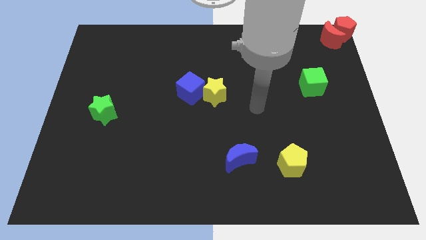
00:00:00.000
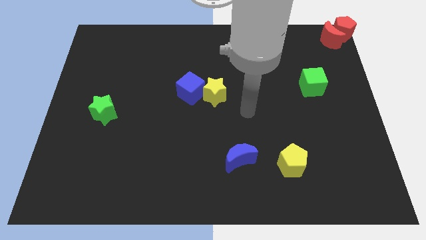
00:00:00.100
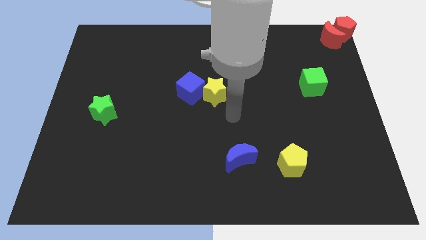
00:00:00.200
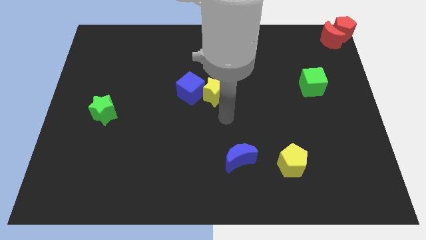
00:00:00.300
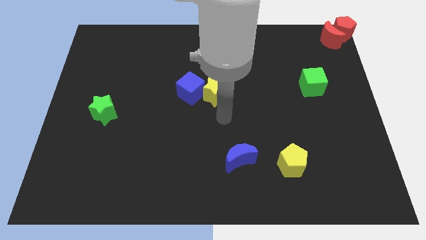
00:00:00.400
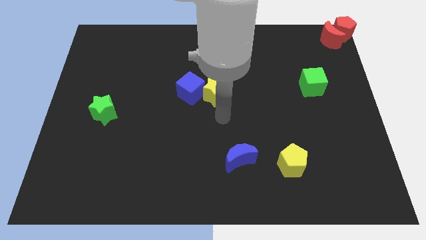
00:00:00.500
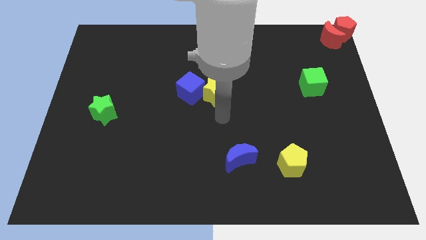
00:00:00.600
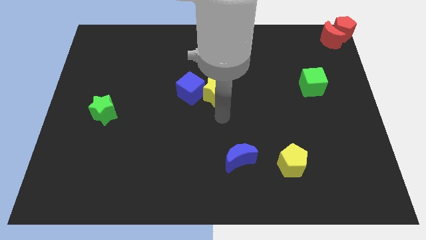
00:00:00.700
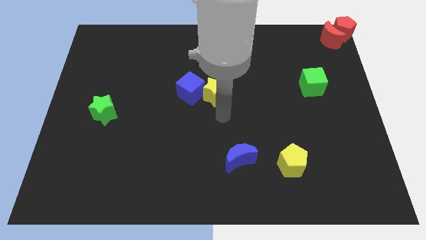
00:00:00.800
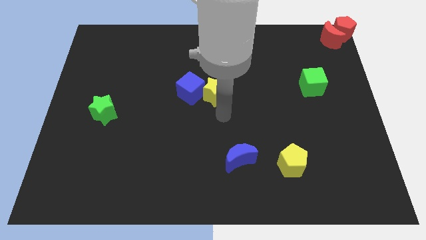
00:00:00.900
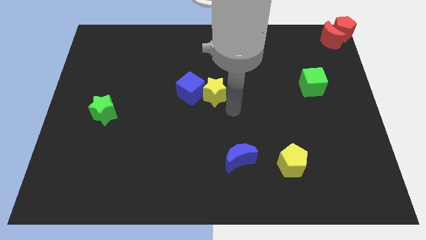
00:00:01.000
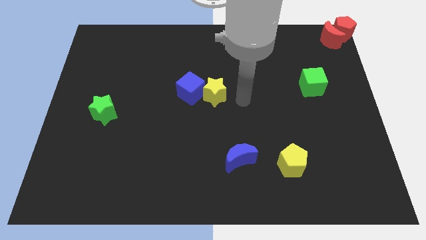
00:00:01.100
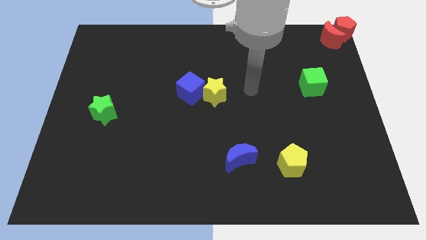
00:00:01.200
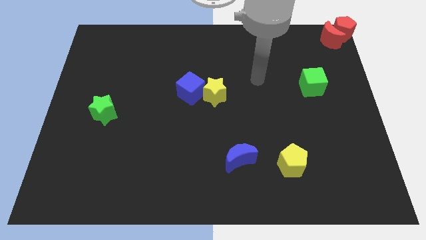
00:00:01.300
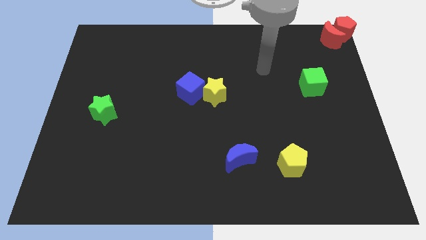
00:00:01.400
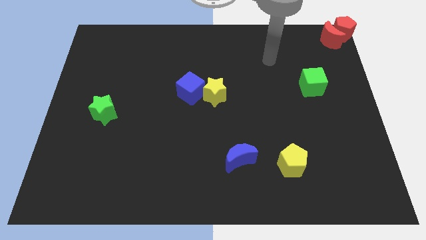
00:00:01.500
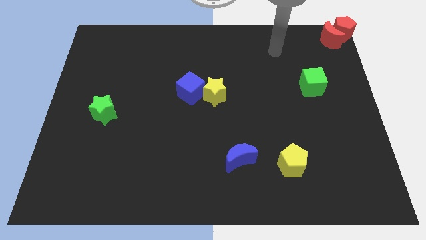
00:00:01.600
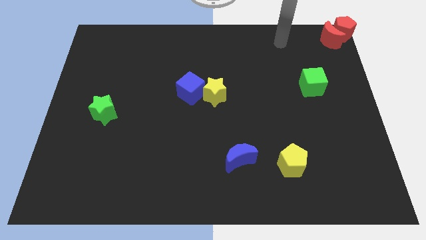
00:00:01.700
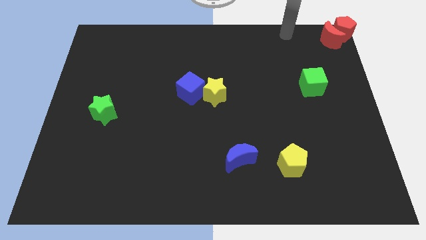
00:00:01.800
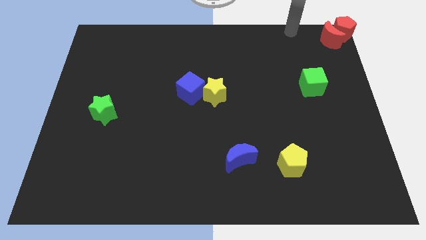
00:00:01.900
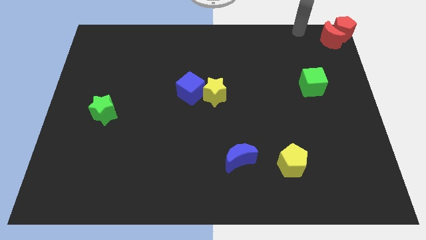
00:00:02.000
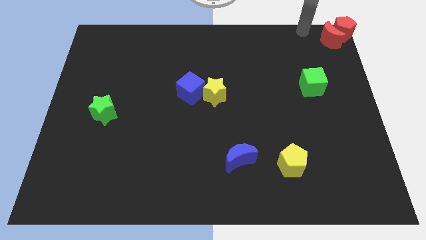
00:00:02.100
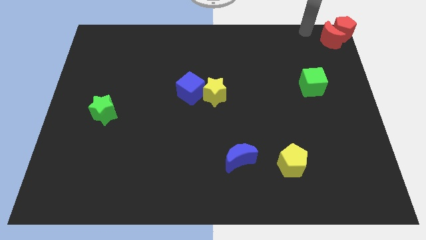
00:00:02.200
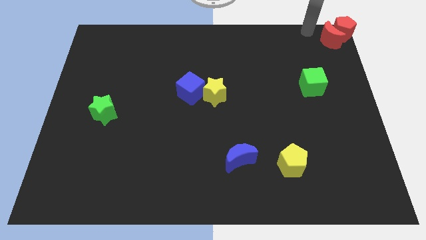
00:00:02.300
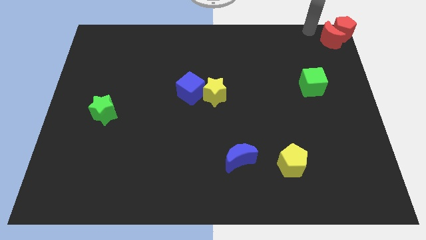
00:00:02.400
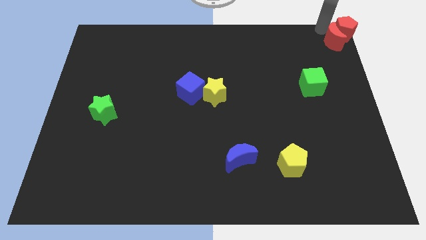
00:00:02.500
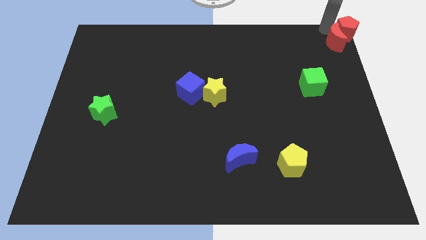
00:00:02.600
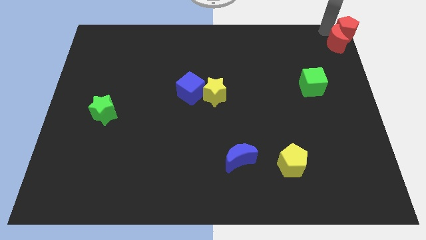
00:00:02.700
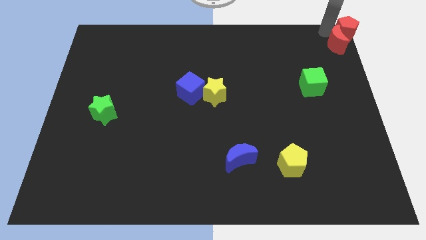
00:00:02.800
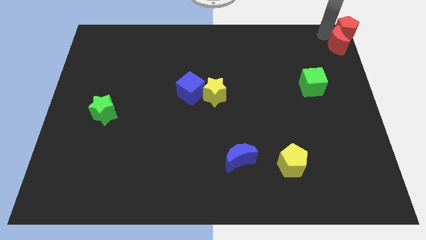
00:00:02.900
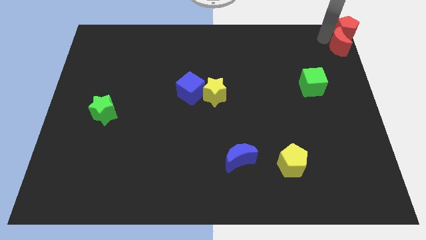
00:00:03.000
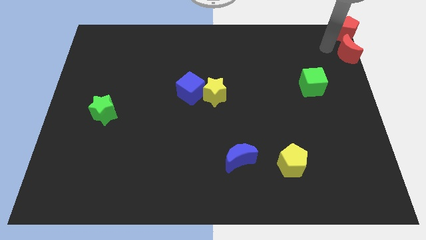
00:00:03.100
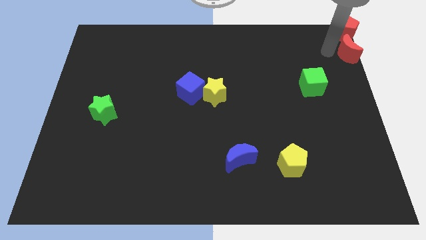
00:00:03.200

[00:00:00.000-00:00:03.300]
move the red moon to the bottom of the red pentagon

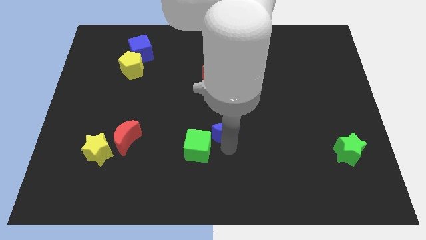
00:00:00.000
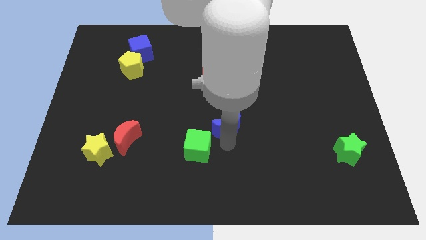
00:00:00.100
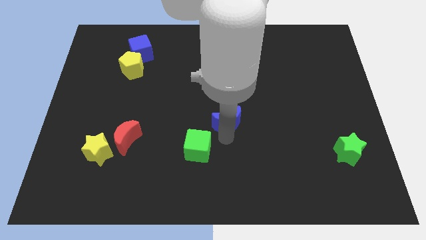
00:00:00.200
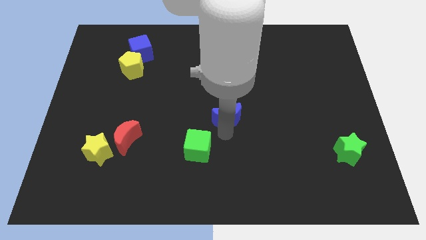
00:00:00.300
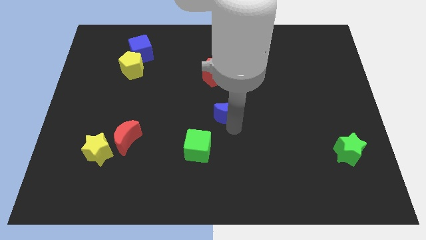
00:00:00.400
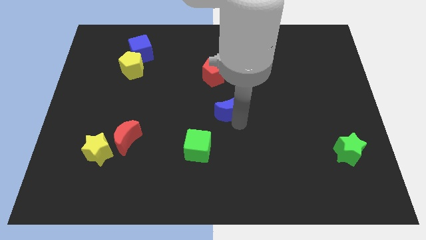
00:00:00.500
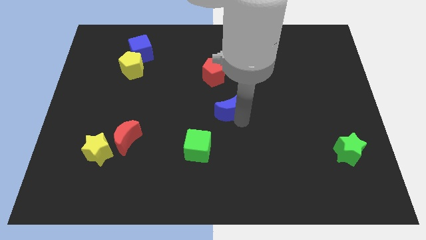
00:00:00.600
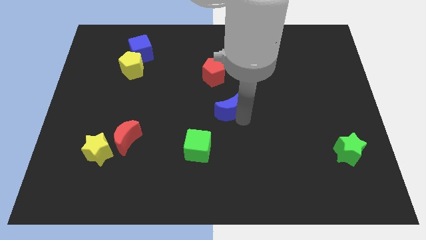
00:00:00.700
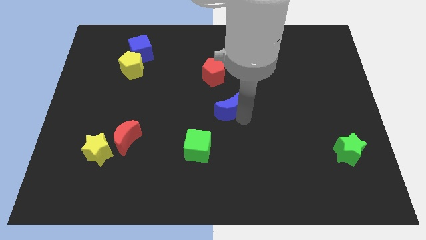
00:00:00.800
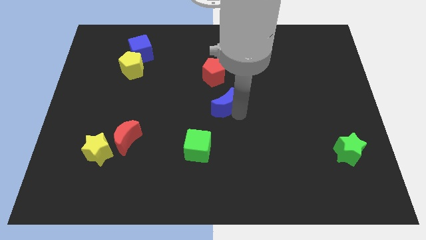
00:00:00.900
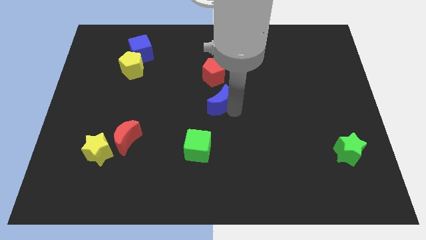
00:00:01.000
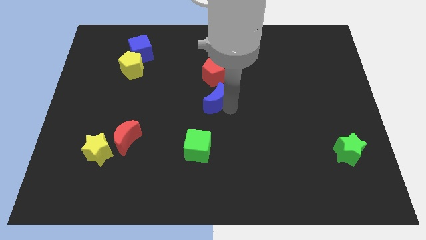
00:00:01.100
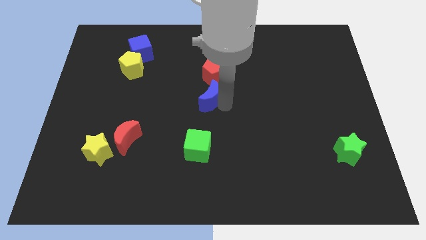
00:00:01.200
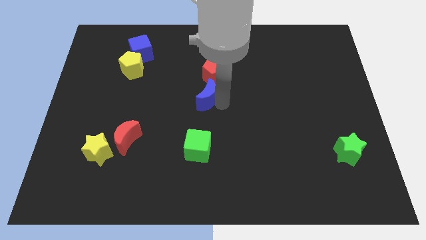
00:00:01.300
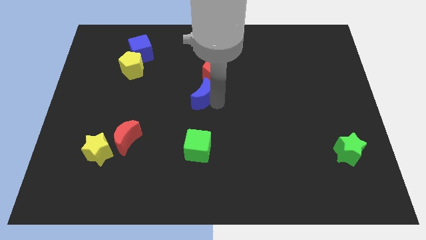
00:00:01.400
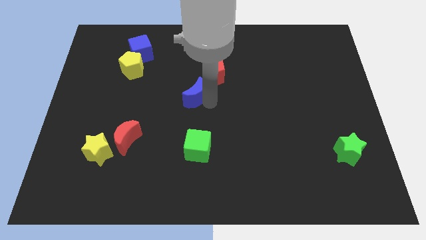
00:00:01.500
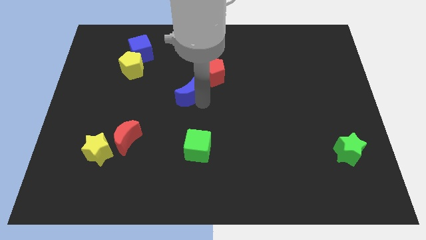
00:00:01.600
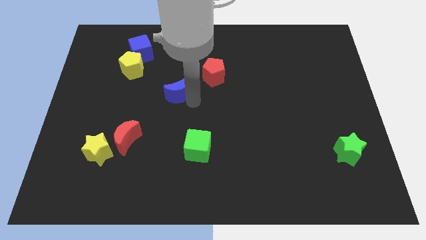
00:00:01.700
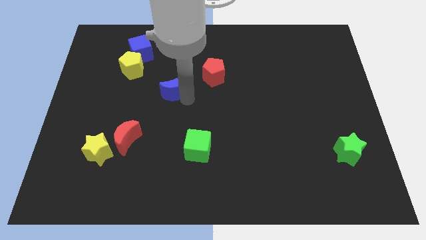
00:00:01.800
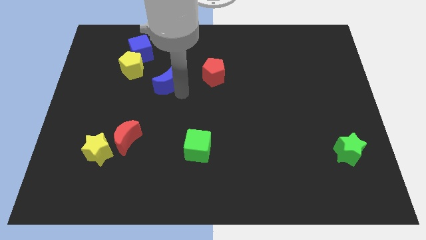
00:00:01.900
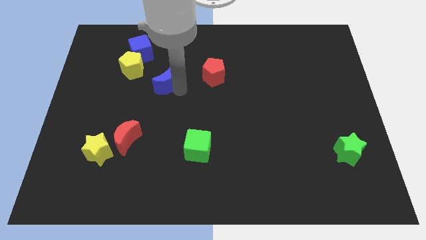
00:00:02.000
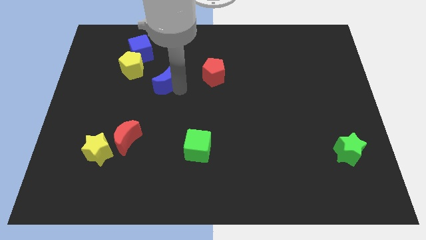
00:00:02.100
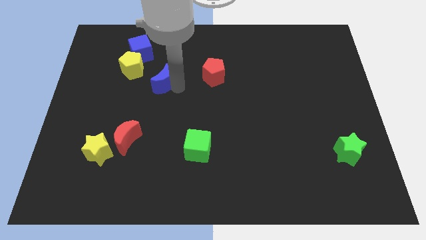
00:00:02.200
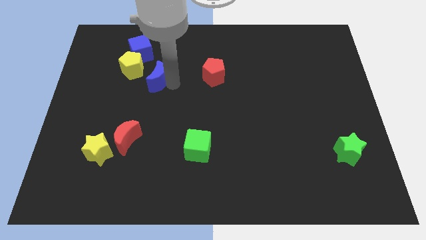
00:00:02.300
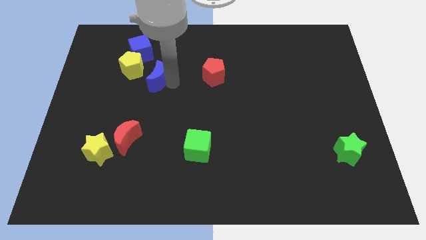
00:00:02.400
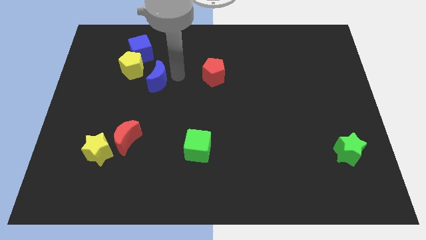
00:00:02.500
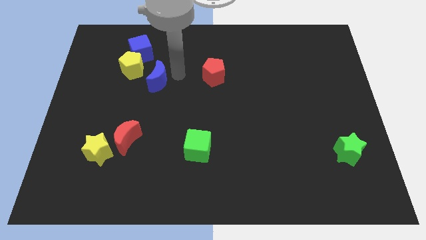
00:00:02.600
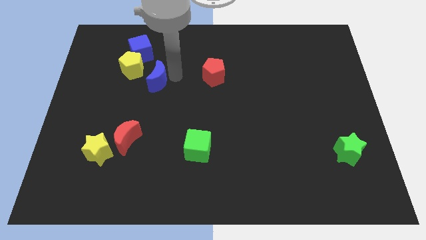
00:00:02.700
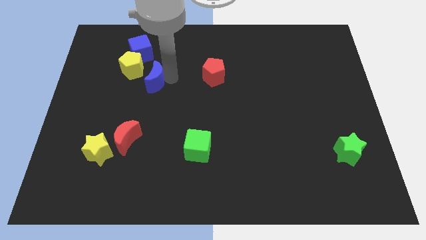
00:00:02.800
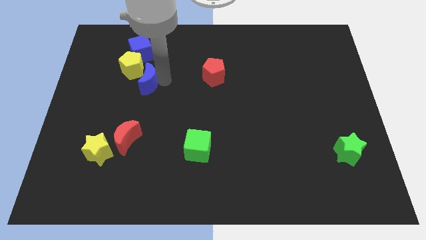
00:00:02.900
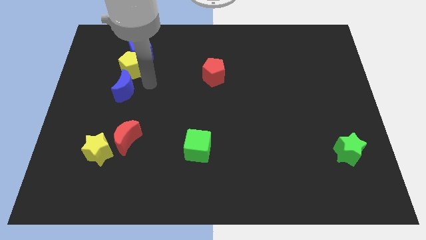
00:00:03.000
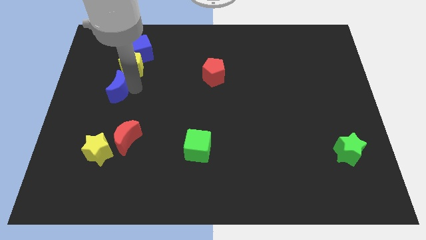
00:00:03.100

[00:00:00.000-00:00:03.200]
push blue crescent below yellow pentagon

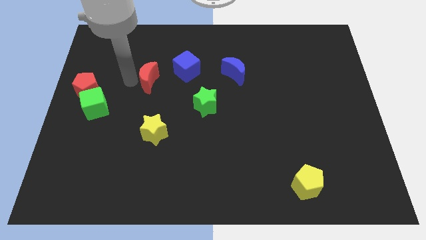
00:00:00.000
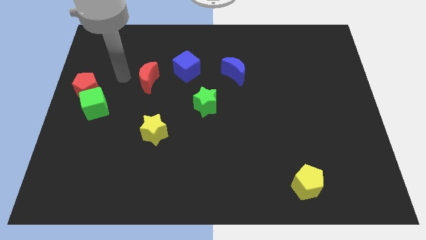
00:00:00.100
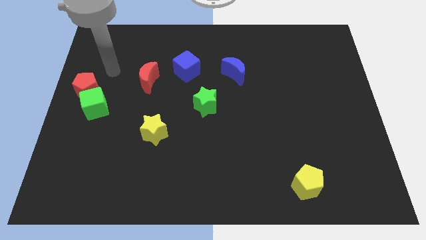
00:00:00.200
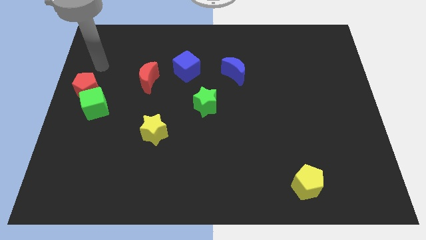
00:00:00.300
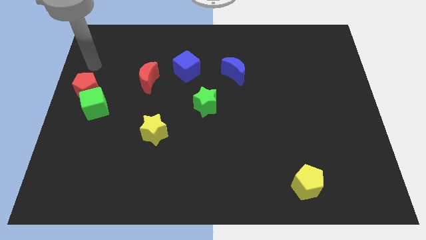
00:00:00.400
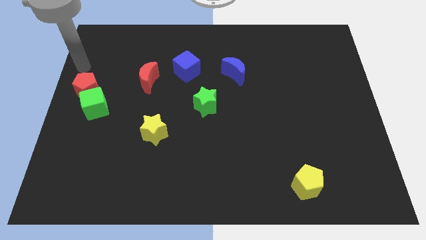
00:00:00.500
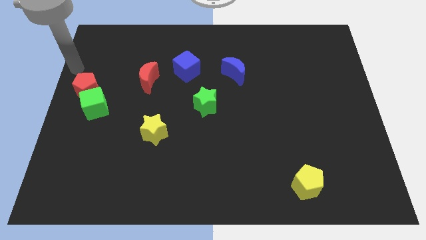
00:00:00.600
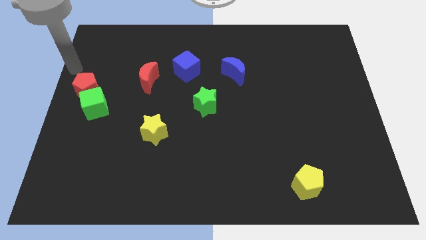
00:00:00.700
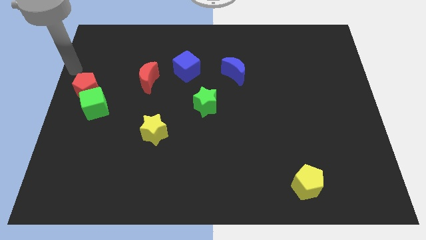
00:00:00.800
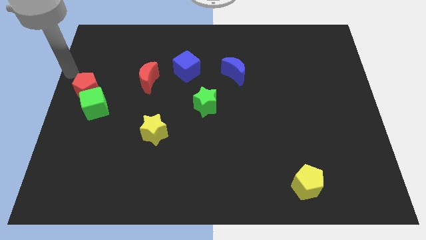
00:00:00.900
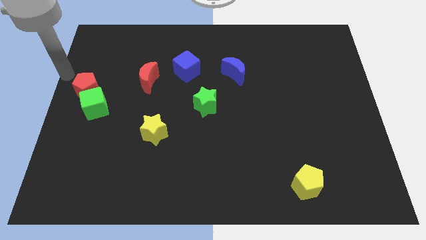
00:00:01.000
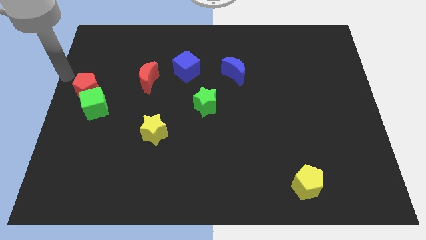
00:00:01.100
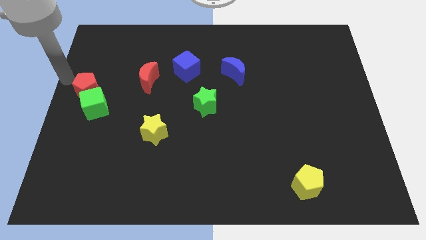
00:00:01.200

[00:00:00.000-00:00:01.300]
place the arm near the red pentagon

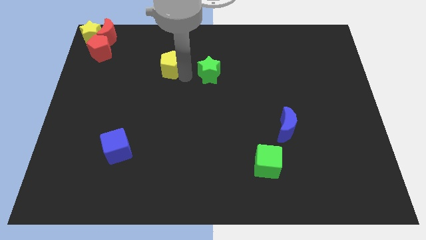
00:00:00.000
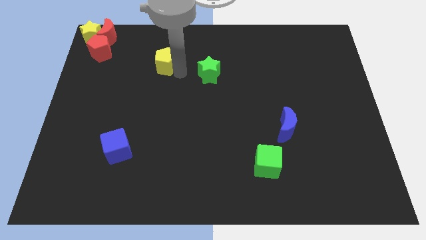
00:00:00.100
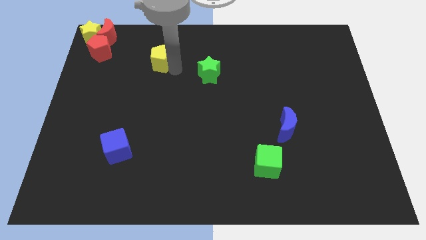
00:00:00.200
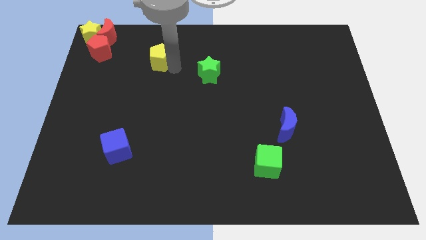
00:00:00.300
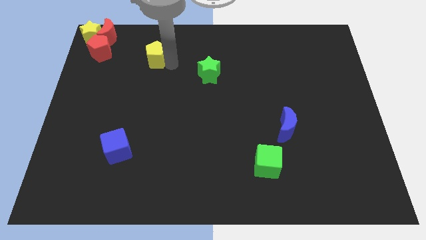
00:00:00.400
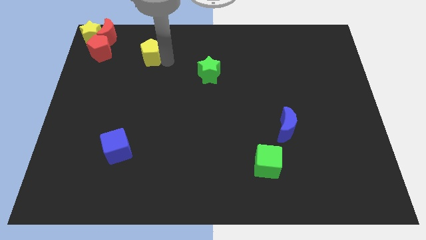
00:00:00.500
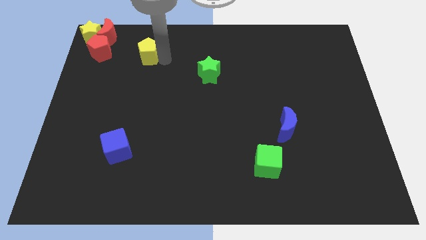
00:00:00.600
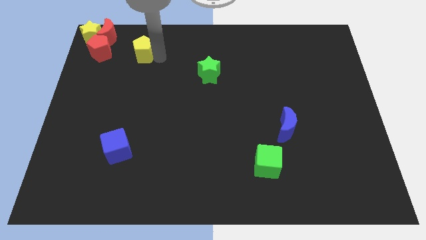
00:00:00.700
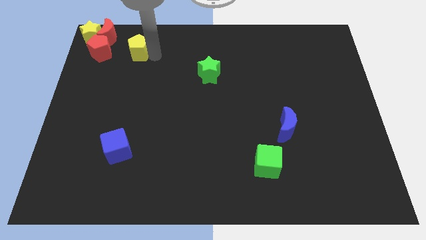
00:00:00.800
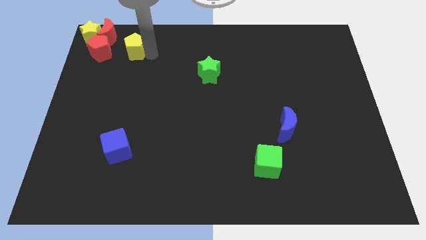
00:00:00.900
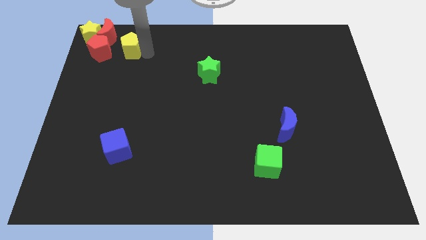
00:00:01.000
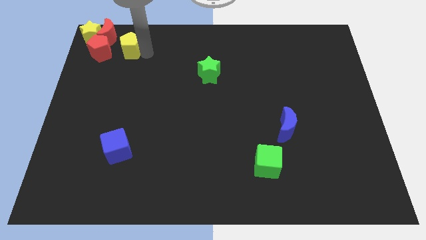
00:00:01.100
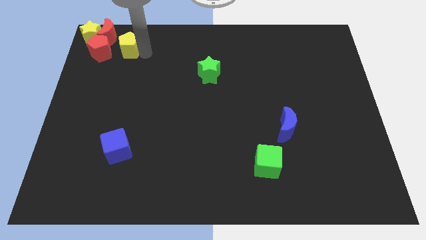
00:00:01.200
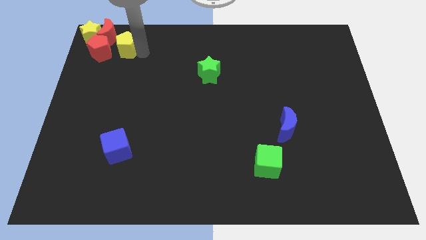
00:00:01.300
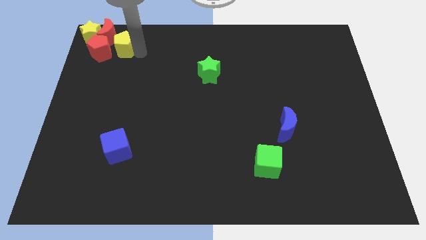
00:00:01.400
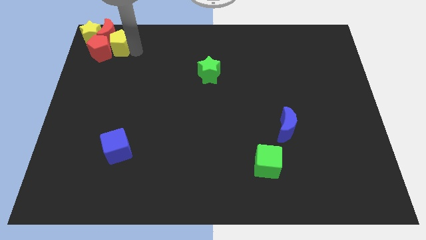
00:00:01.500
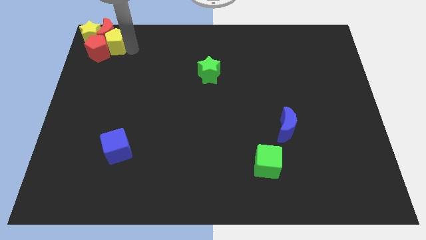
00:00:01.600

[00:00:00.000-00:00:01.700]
drag yellow pentagon close to red crescent
